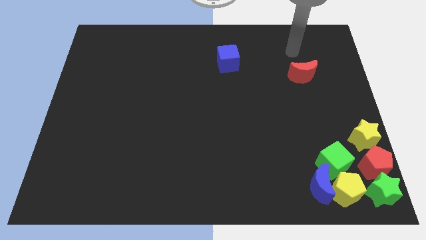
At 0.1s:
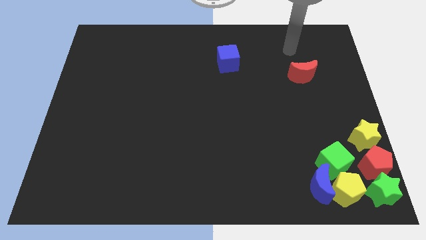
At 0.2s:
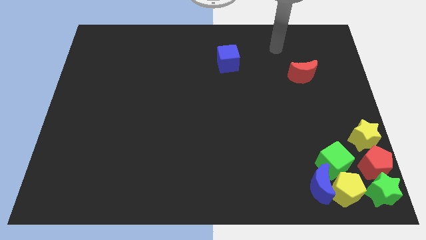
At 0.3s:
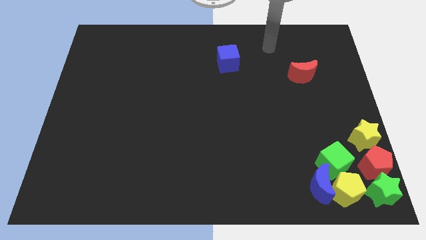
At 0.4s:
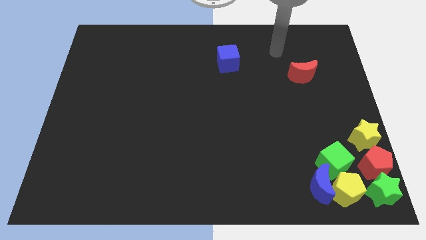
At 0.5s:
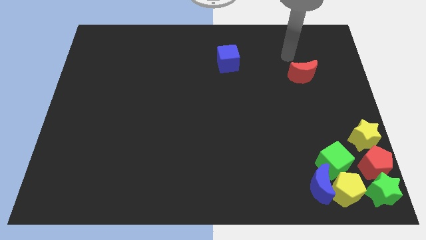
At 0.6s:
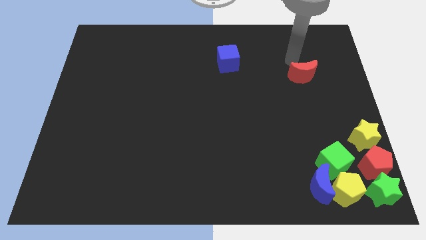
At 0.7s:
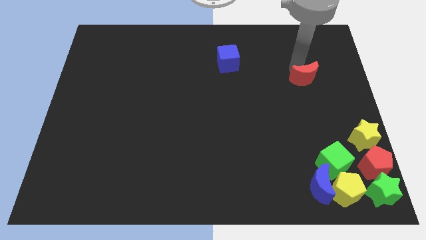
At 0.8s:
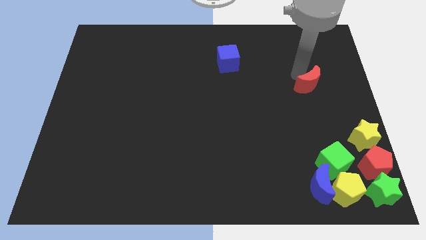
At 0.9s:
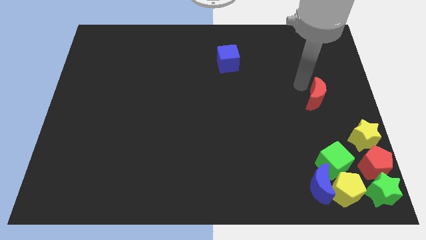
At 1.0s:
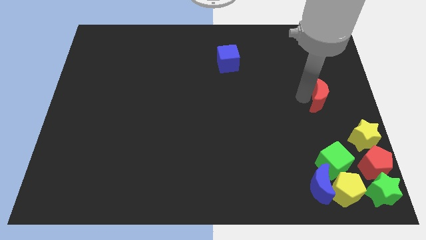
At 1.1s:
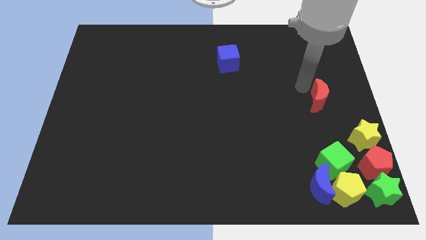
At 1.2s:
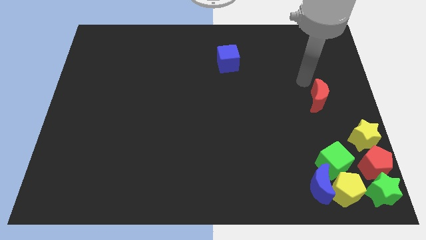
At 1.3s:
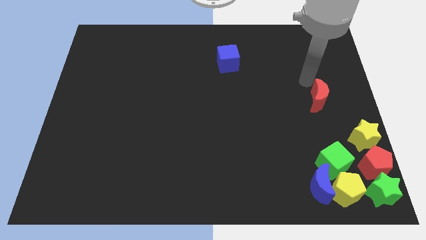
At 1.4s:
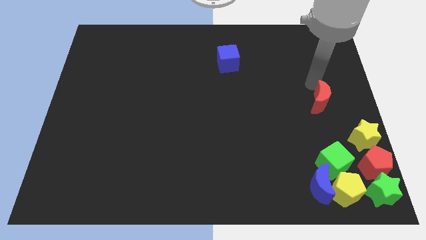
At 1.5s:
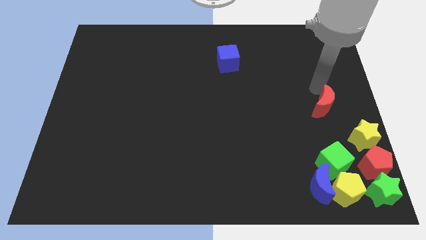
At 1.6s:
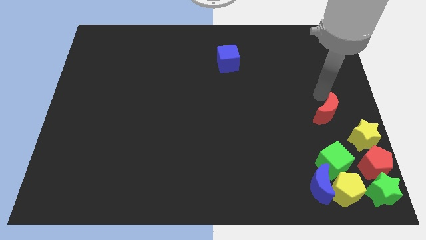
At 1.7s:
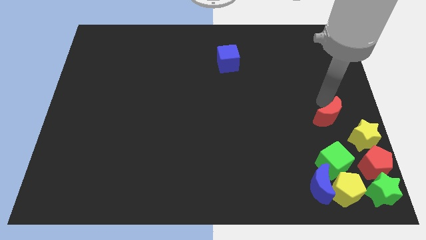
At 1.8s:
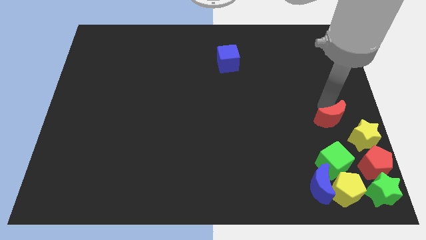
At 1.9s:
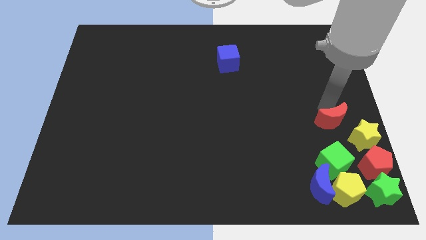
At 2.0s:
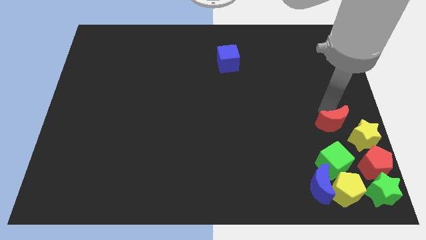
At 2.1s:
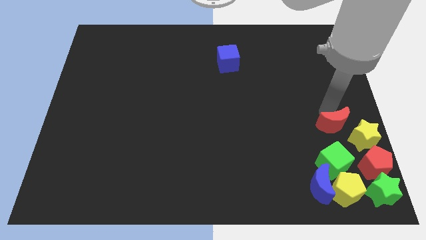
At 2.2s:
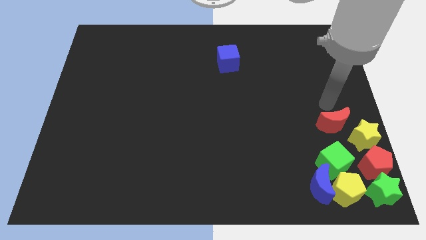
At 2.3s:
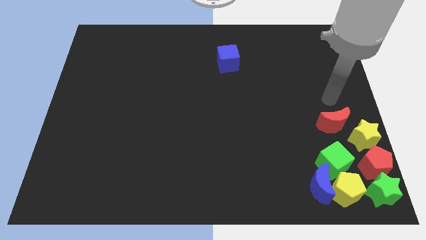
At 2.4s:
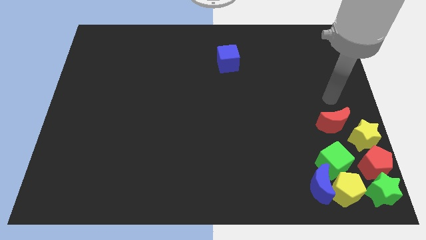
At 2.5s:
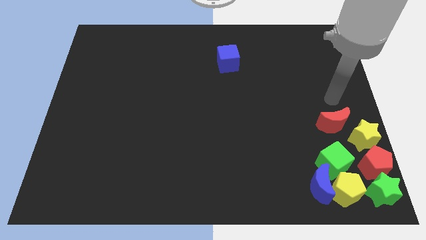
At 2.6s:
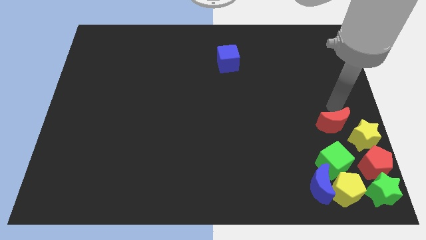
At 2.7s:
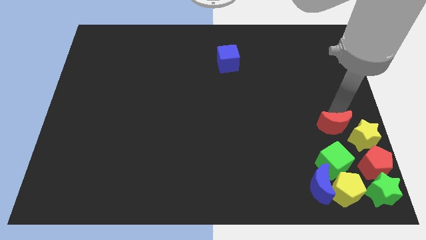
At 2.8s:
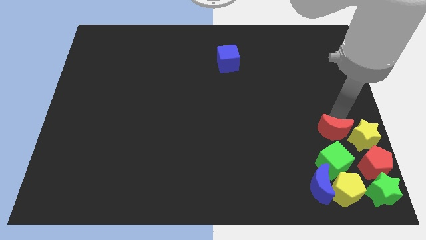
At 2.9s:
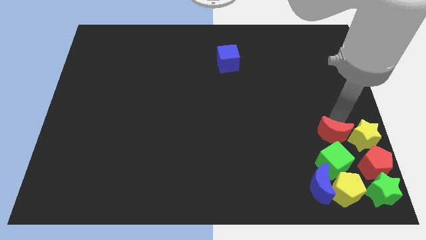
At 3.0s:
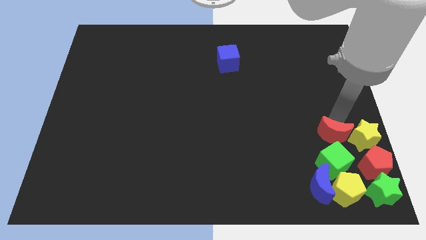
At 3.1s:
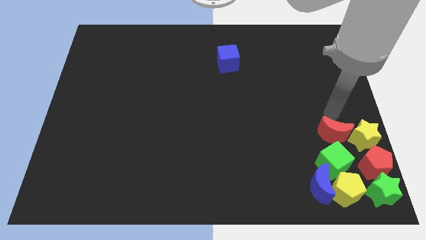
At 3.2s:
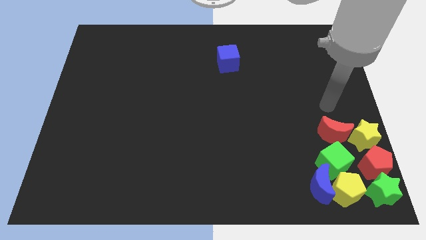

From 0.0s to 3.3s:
move the red crescent close to the green cube

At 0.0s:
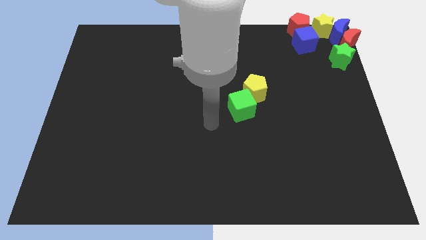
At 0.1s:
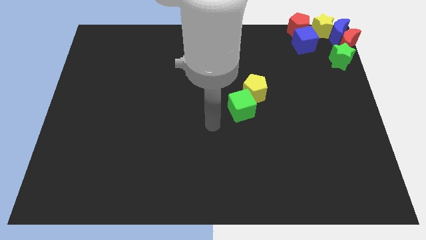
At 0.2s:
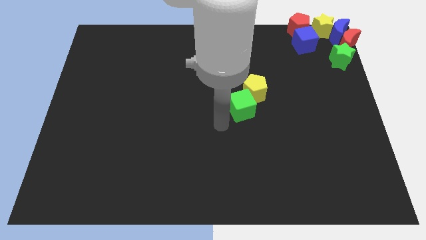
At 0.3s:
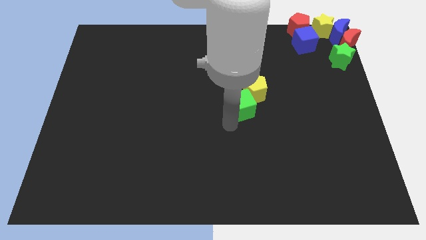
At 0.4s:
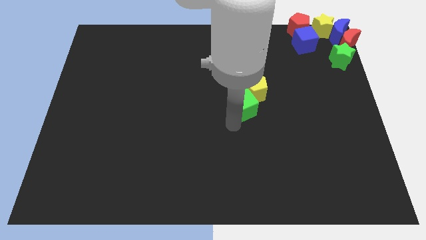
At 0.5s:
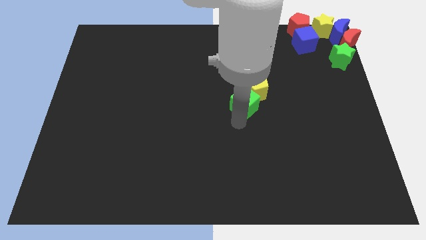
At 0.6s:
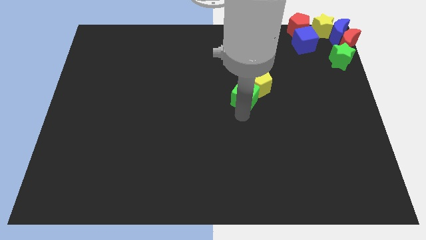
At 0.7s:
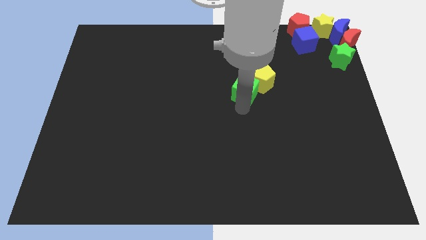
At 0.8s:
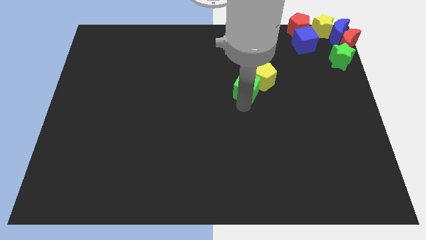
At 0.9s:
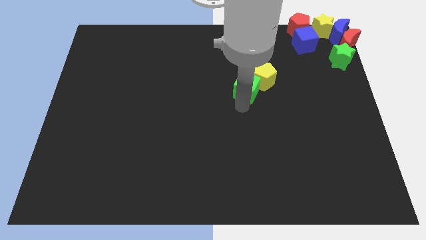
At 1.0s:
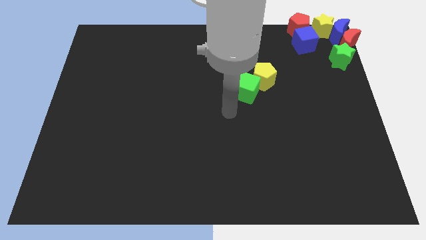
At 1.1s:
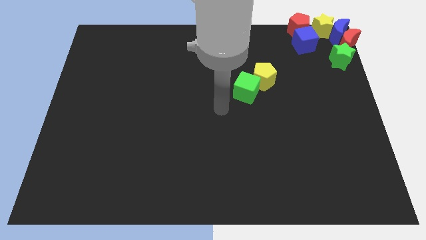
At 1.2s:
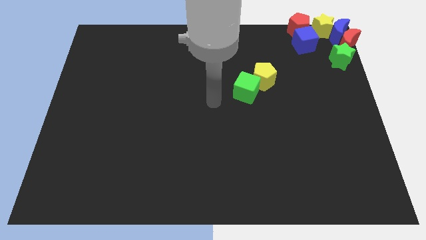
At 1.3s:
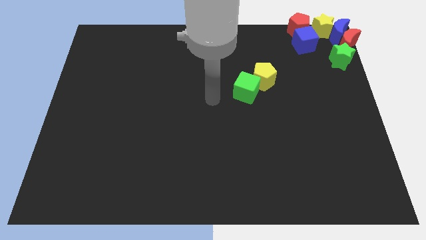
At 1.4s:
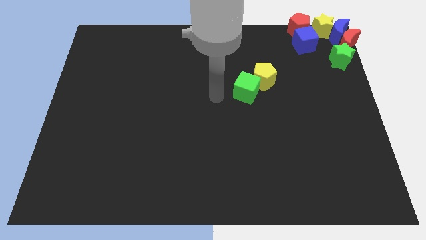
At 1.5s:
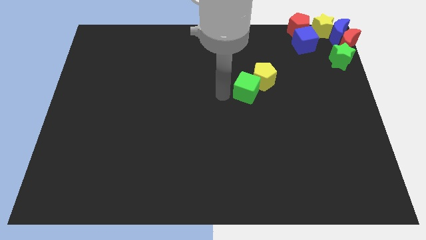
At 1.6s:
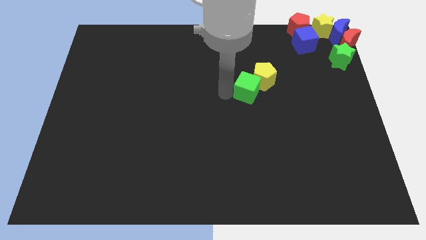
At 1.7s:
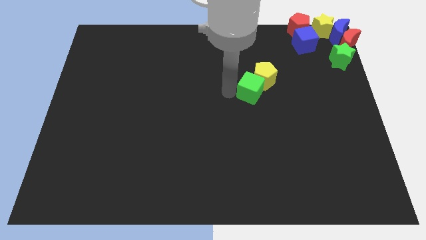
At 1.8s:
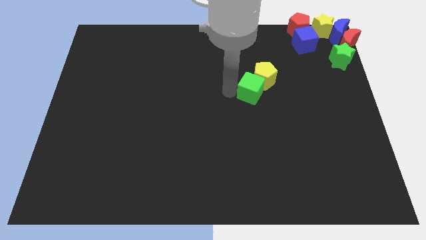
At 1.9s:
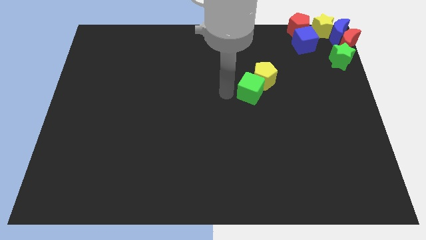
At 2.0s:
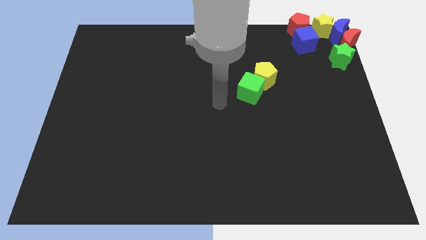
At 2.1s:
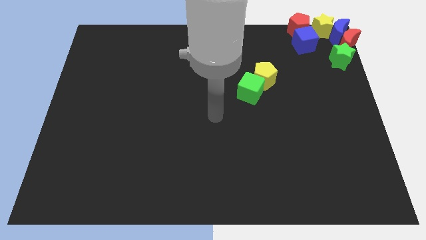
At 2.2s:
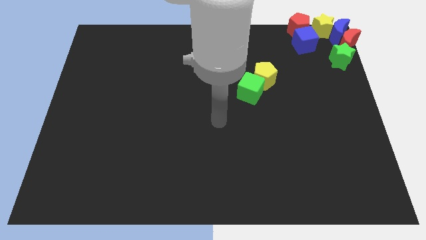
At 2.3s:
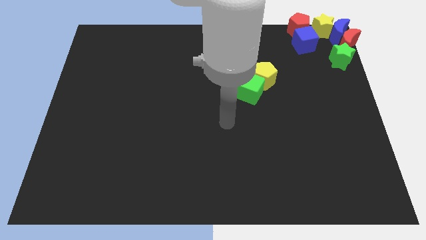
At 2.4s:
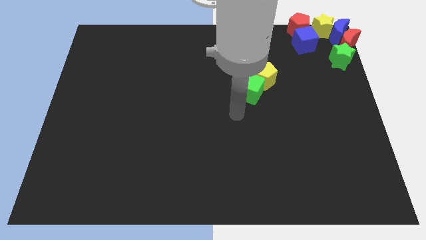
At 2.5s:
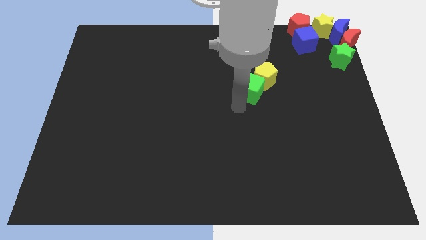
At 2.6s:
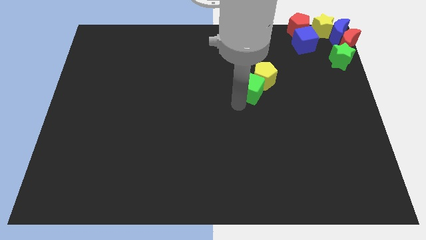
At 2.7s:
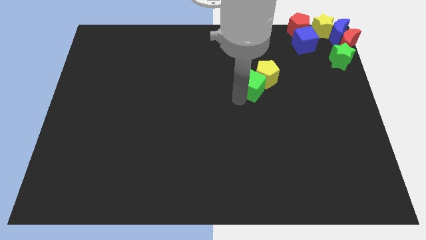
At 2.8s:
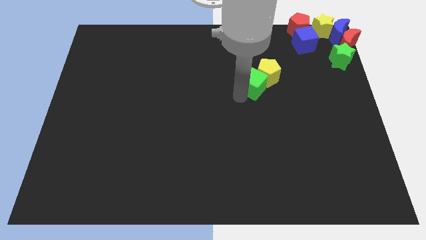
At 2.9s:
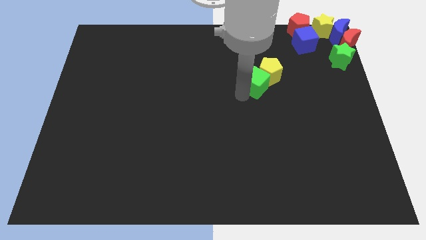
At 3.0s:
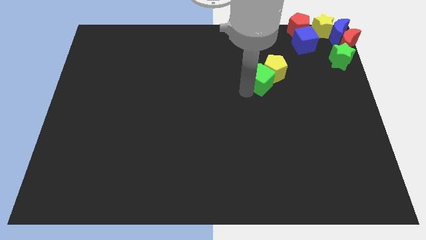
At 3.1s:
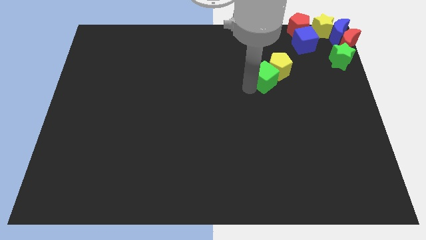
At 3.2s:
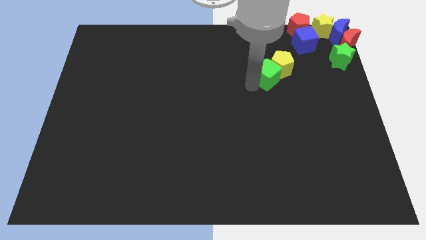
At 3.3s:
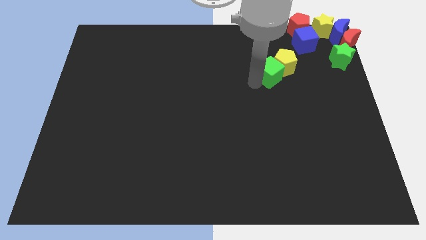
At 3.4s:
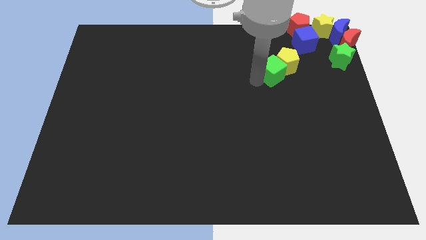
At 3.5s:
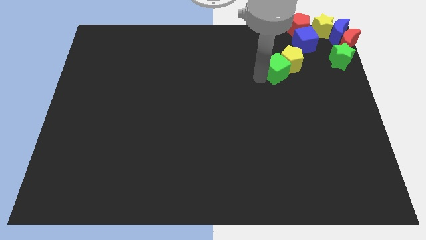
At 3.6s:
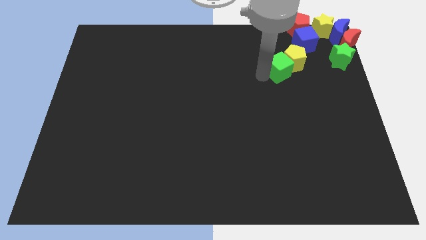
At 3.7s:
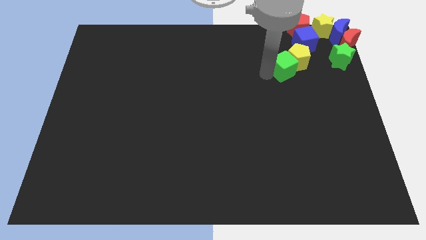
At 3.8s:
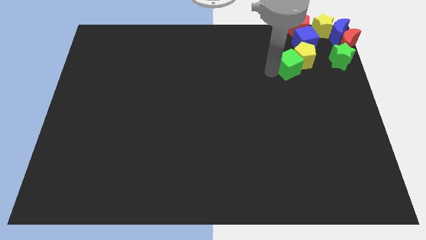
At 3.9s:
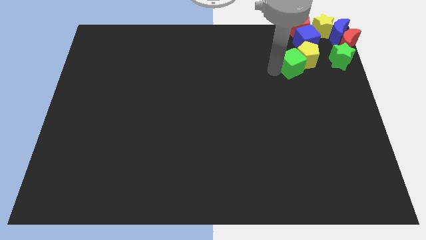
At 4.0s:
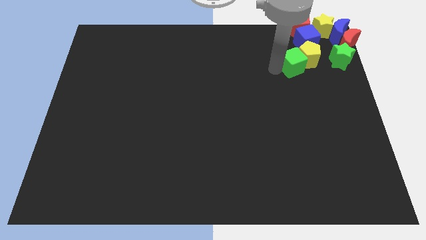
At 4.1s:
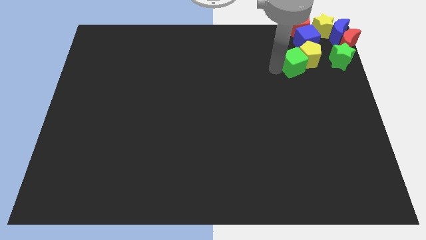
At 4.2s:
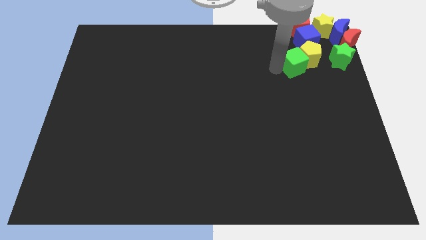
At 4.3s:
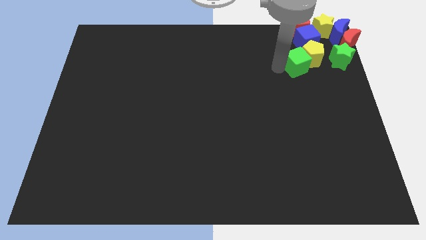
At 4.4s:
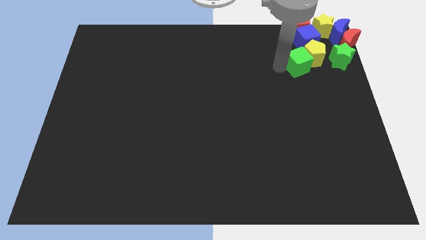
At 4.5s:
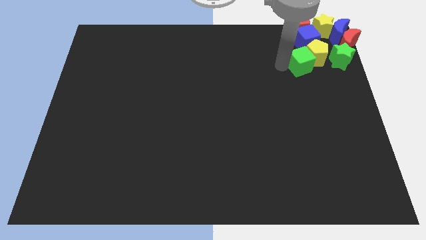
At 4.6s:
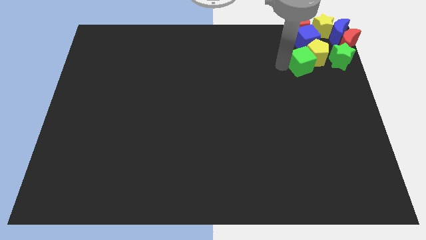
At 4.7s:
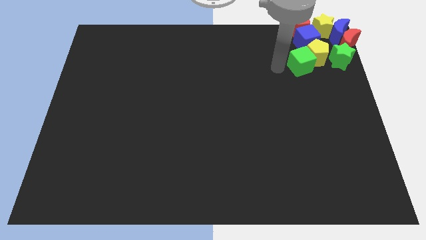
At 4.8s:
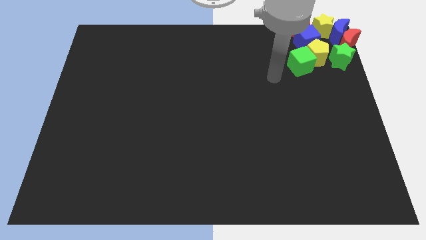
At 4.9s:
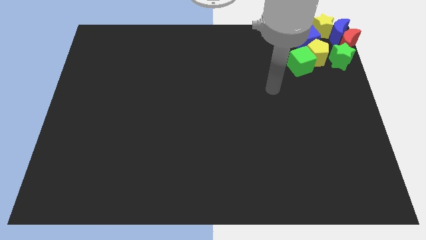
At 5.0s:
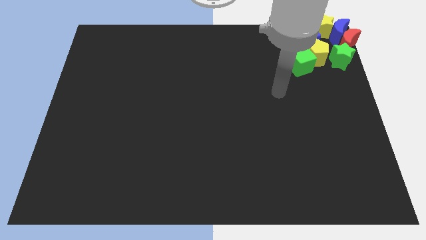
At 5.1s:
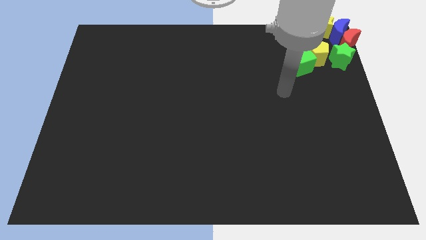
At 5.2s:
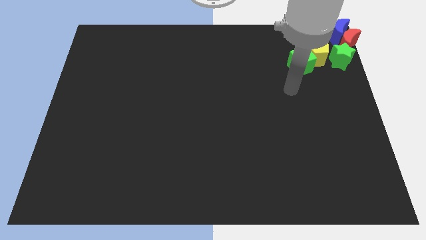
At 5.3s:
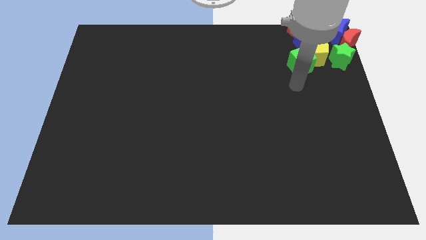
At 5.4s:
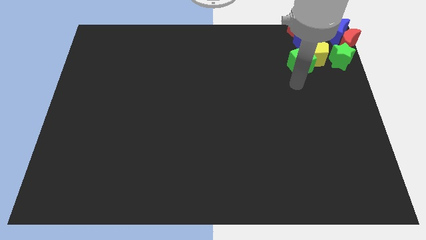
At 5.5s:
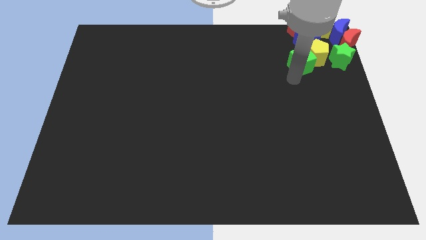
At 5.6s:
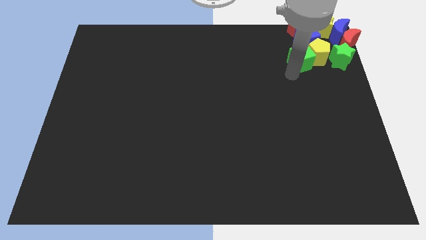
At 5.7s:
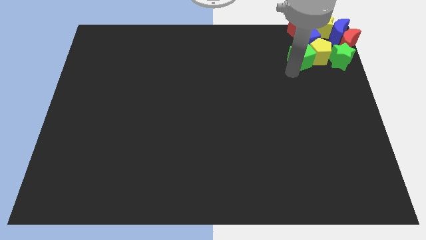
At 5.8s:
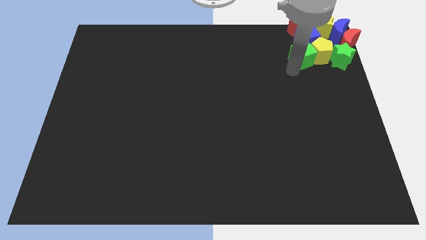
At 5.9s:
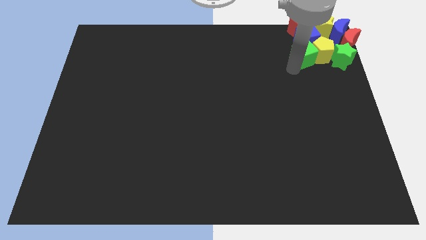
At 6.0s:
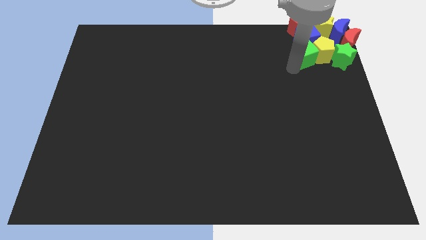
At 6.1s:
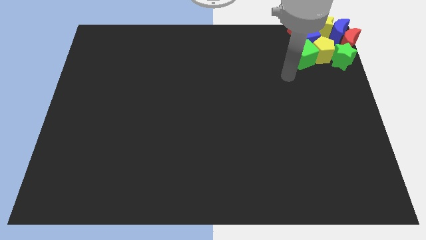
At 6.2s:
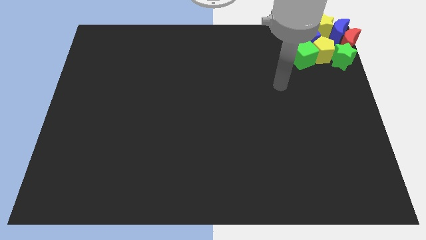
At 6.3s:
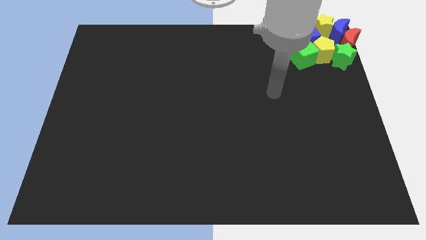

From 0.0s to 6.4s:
push the green cube and yellow pentagon into a group of objects
